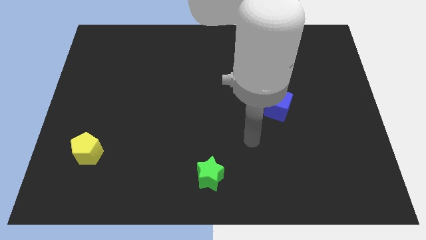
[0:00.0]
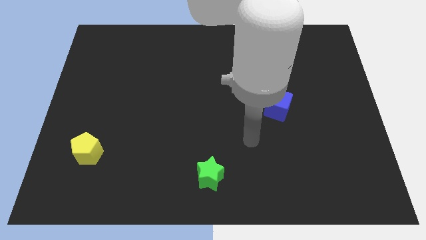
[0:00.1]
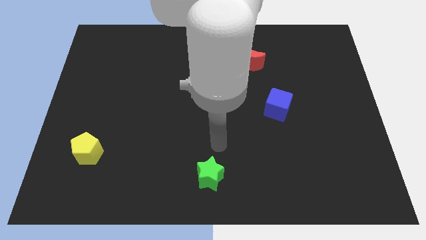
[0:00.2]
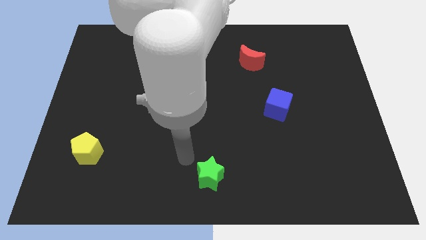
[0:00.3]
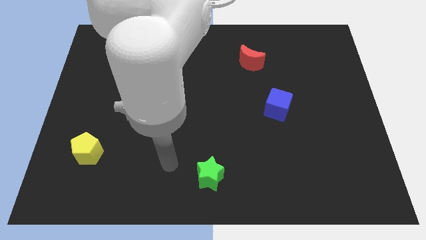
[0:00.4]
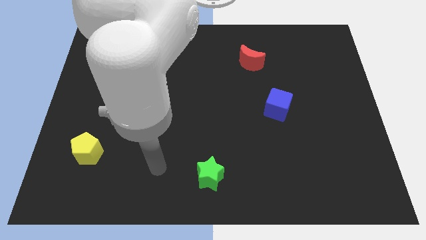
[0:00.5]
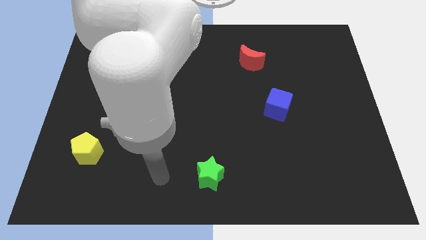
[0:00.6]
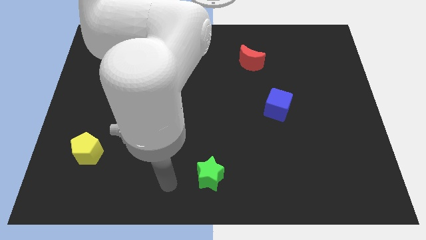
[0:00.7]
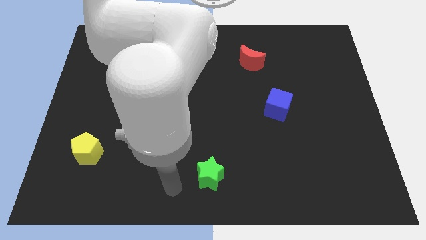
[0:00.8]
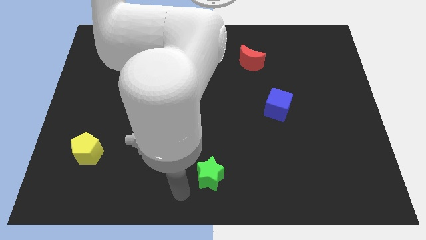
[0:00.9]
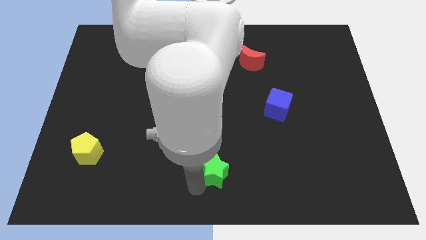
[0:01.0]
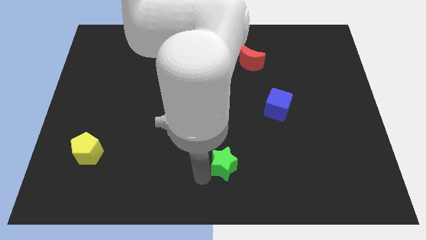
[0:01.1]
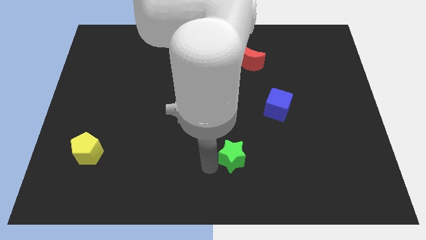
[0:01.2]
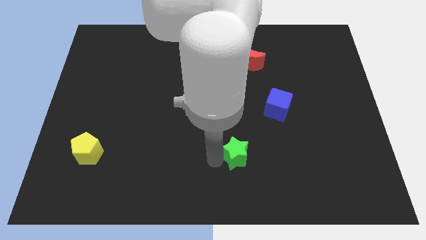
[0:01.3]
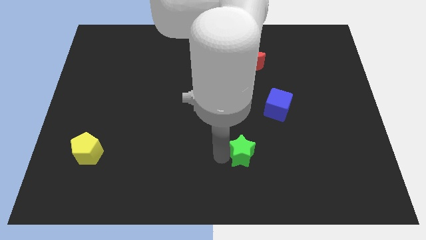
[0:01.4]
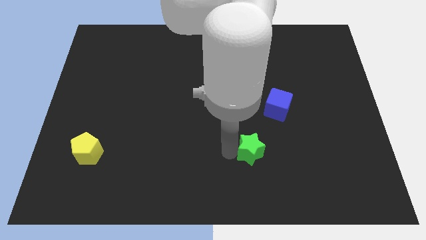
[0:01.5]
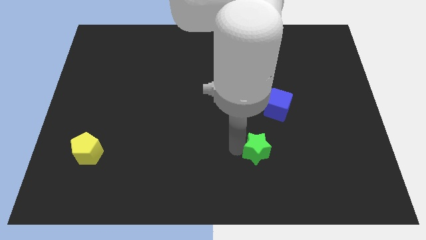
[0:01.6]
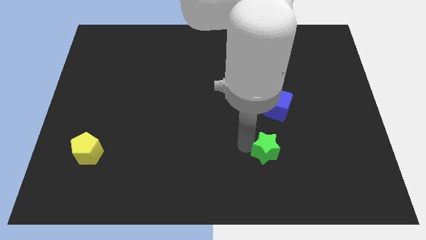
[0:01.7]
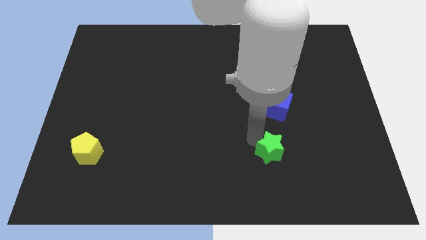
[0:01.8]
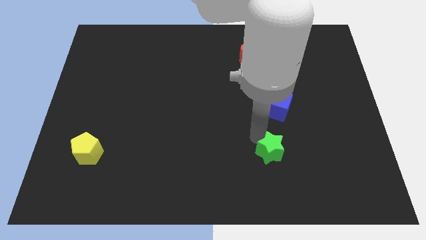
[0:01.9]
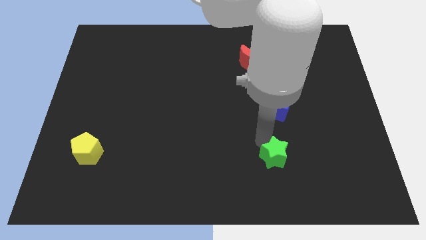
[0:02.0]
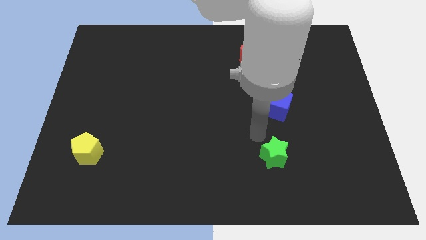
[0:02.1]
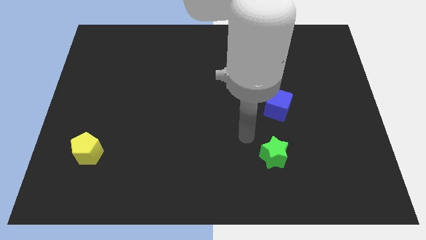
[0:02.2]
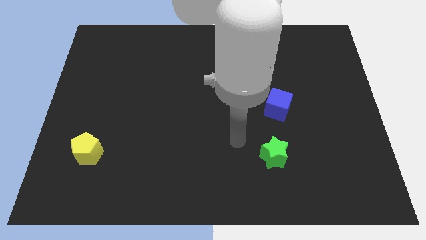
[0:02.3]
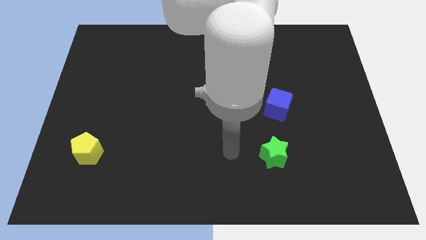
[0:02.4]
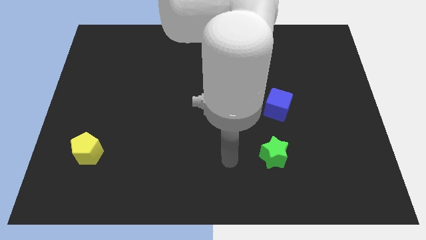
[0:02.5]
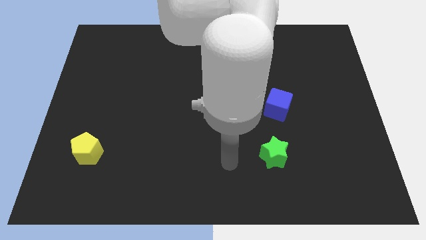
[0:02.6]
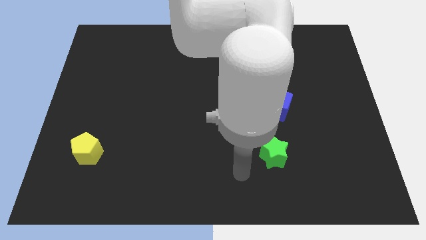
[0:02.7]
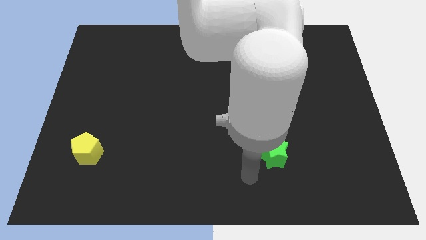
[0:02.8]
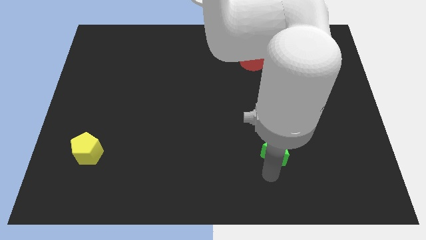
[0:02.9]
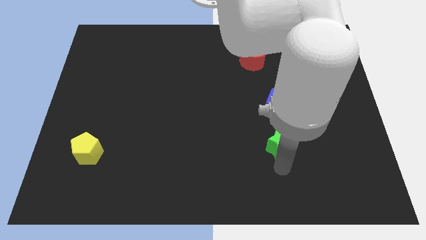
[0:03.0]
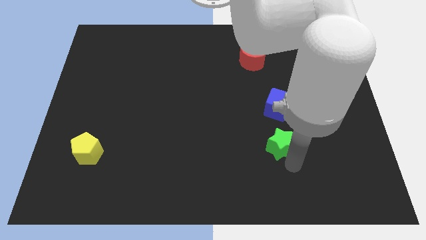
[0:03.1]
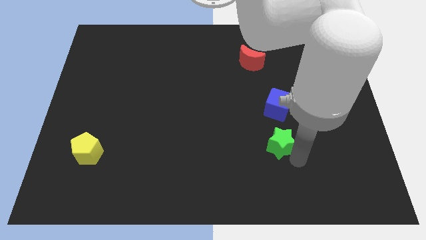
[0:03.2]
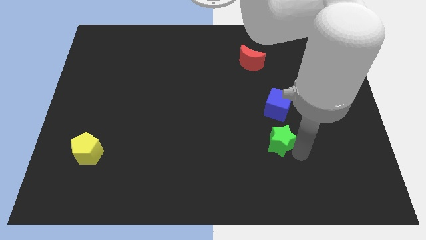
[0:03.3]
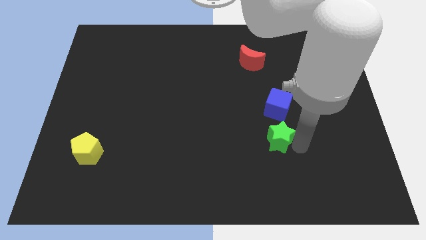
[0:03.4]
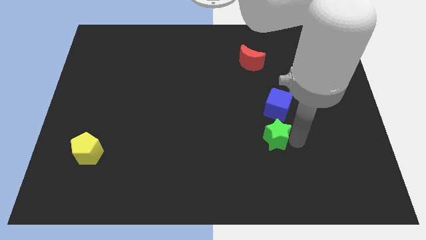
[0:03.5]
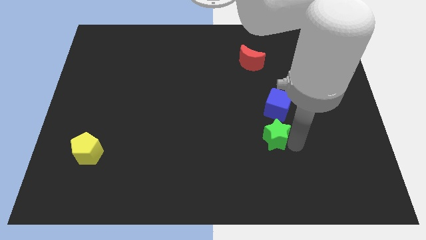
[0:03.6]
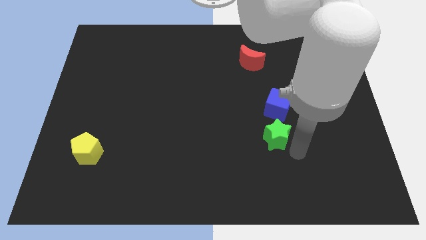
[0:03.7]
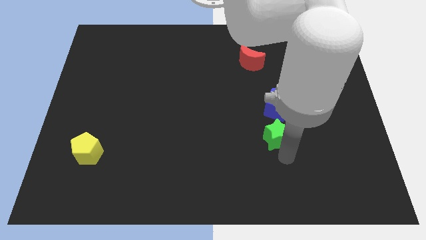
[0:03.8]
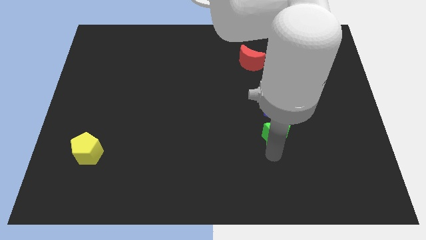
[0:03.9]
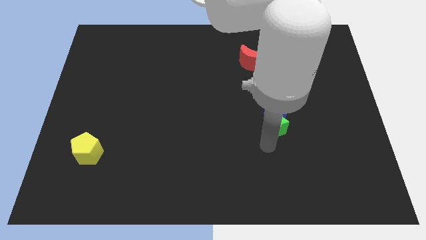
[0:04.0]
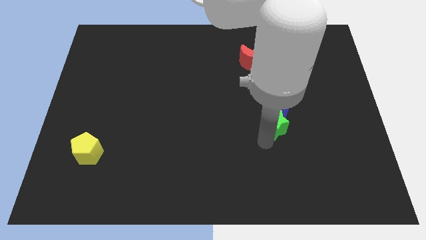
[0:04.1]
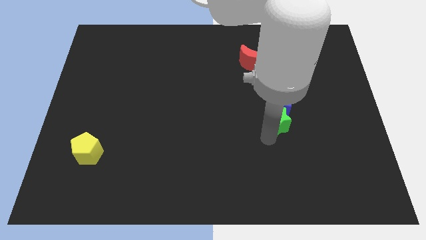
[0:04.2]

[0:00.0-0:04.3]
move the star towards the blue cube

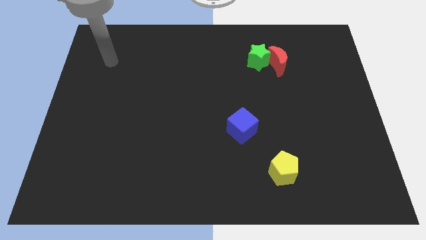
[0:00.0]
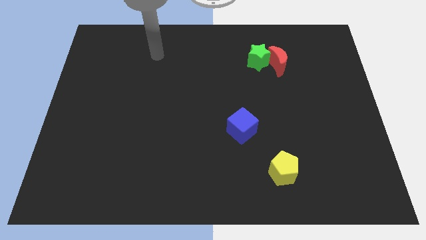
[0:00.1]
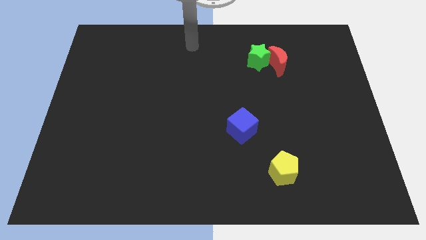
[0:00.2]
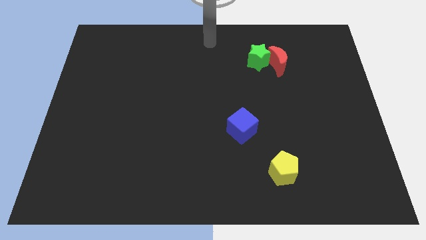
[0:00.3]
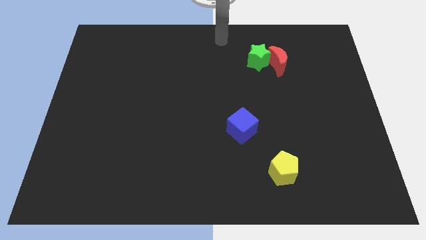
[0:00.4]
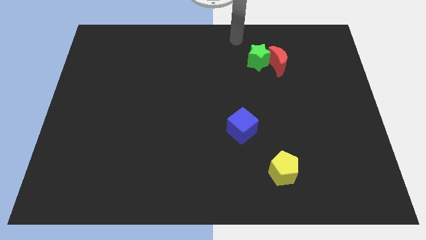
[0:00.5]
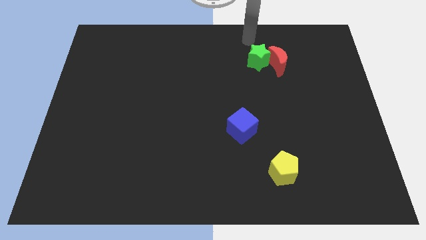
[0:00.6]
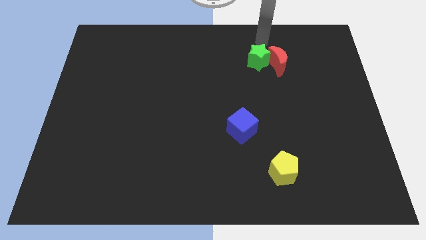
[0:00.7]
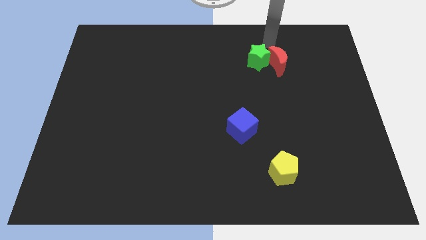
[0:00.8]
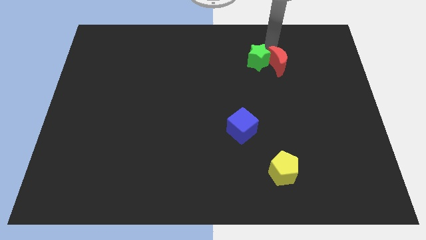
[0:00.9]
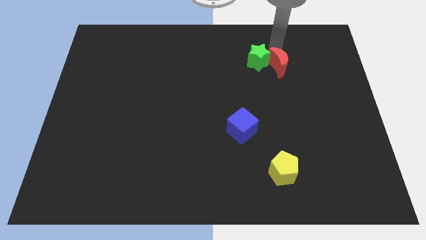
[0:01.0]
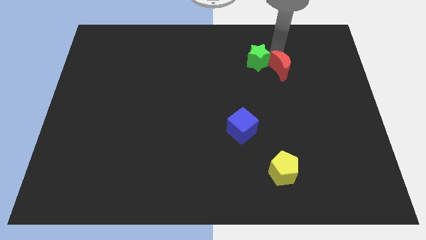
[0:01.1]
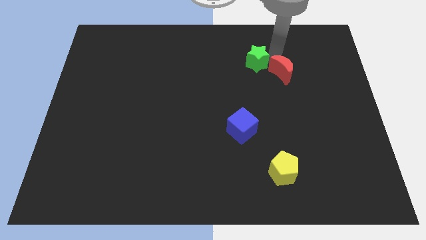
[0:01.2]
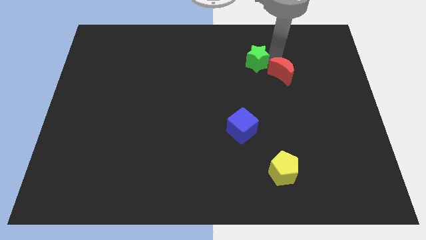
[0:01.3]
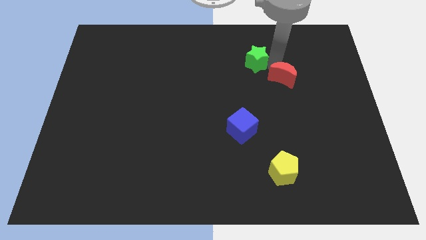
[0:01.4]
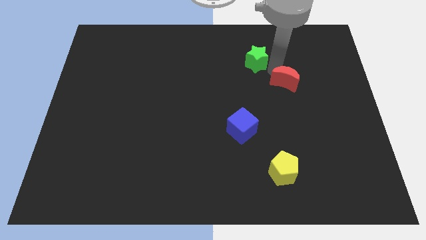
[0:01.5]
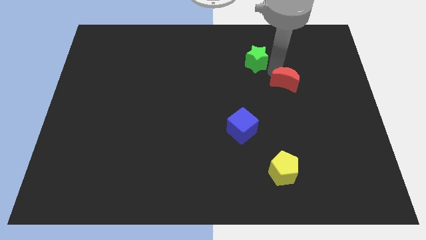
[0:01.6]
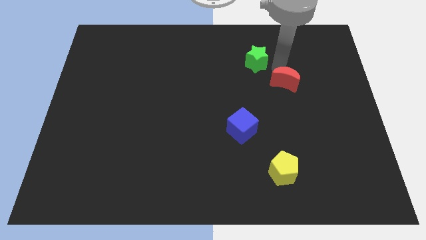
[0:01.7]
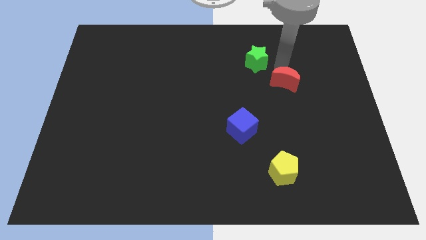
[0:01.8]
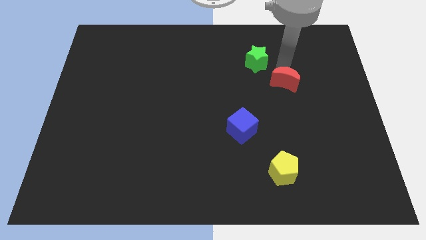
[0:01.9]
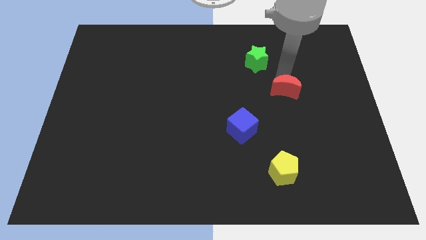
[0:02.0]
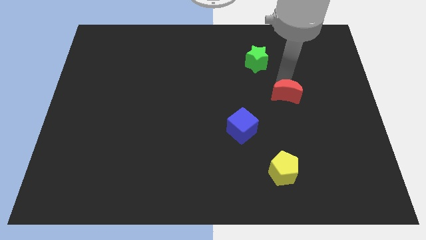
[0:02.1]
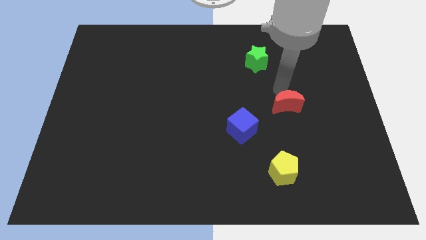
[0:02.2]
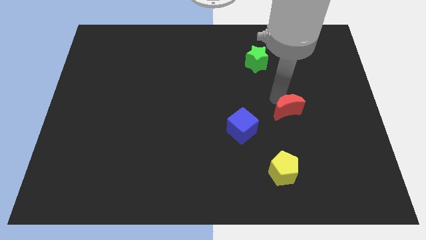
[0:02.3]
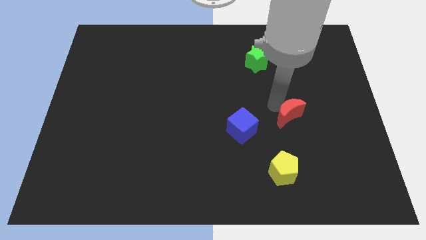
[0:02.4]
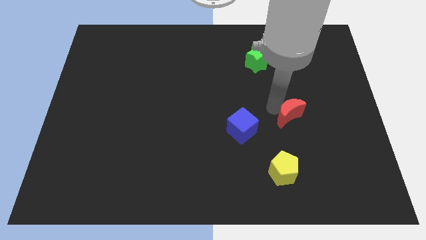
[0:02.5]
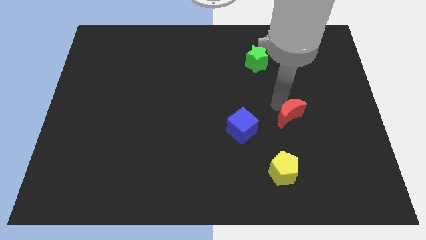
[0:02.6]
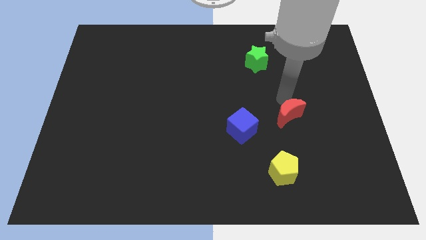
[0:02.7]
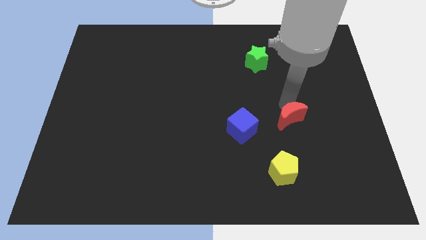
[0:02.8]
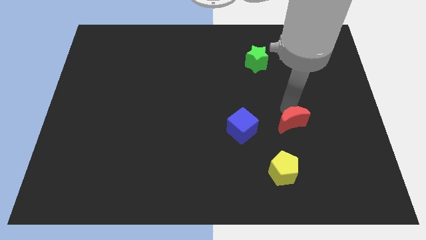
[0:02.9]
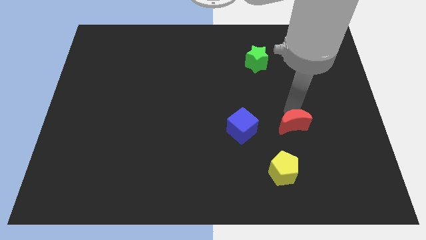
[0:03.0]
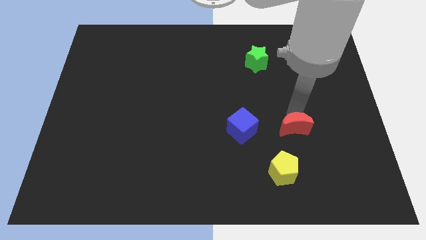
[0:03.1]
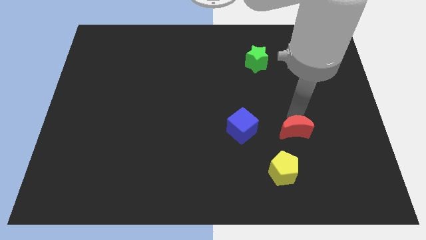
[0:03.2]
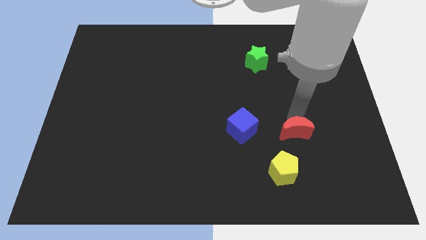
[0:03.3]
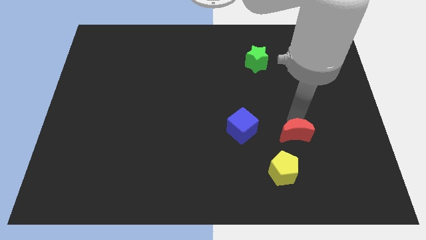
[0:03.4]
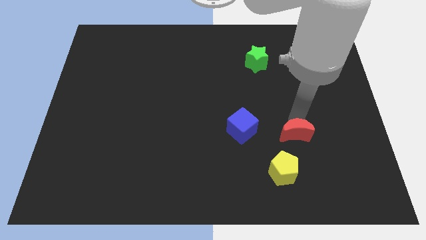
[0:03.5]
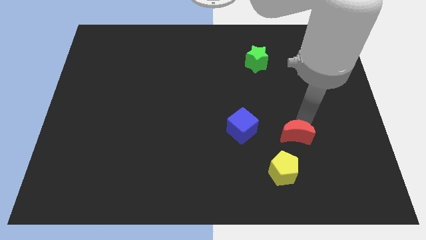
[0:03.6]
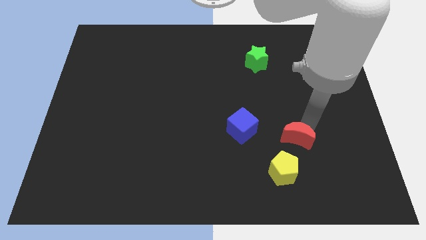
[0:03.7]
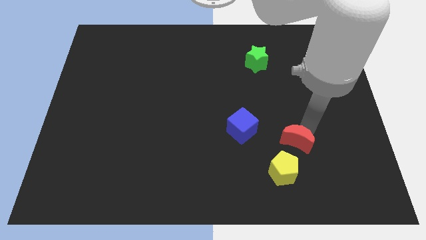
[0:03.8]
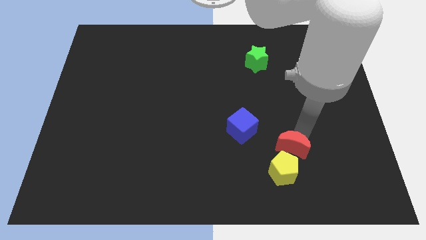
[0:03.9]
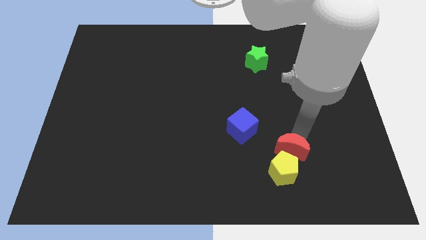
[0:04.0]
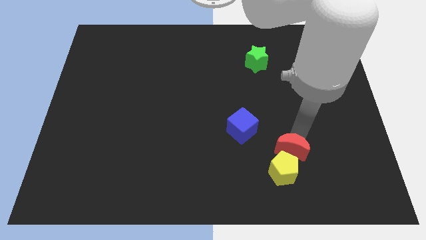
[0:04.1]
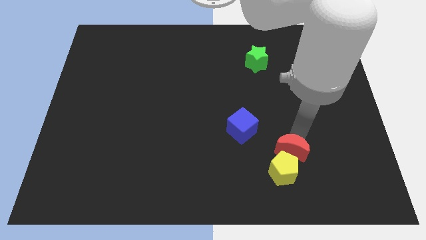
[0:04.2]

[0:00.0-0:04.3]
push the moon next to the yellow block
